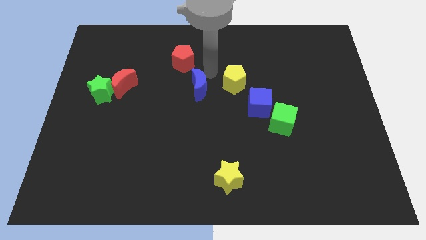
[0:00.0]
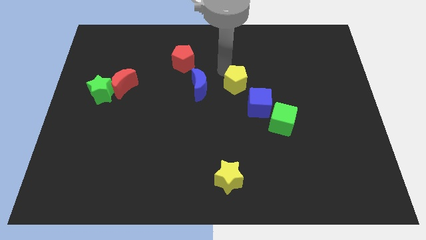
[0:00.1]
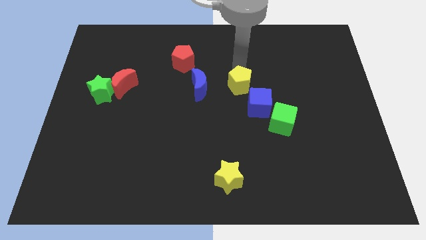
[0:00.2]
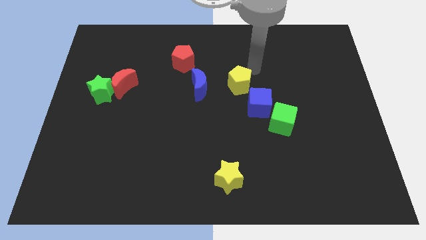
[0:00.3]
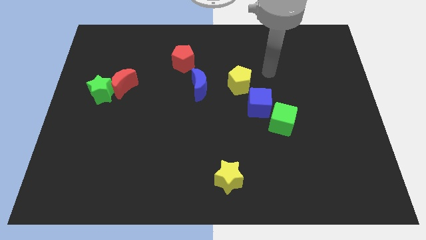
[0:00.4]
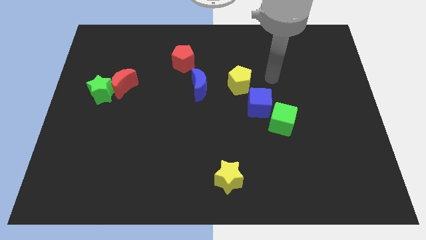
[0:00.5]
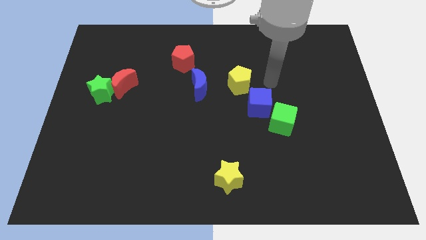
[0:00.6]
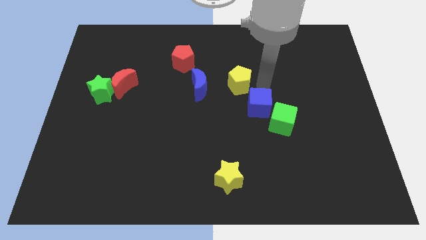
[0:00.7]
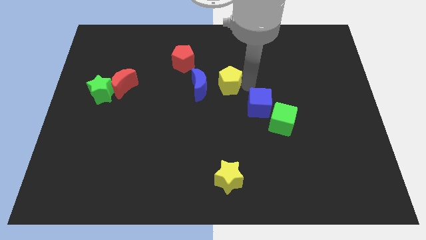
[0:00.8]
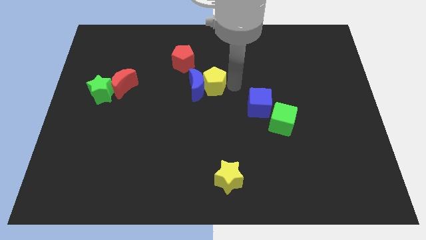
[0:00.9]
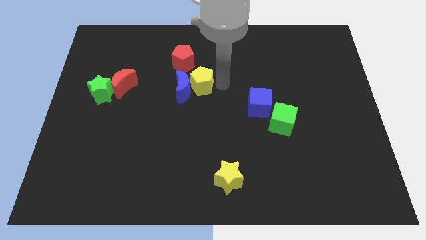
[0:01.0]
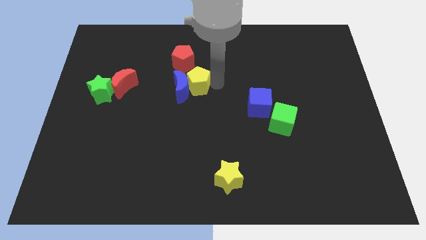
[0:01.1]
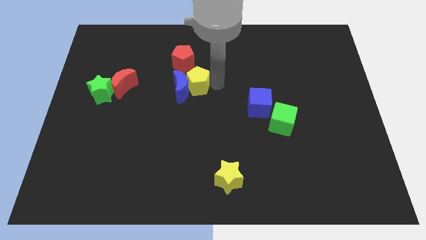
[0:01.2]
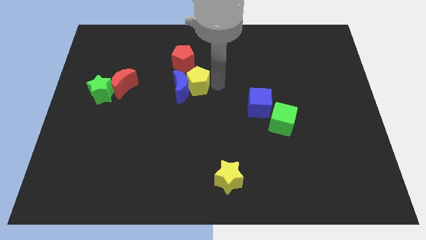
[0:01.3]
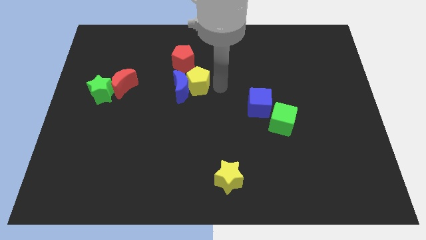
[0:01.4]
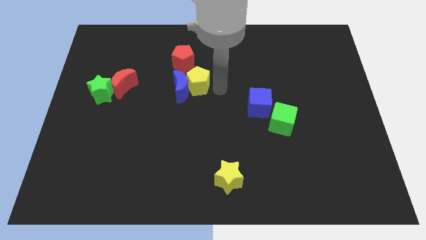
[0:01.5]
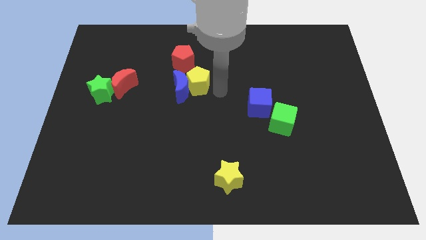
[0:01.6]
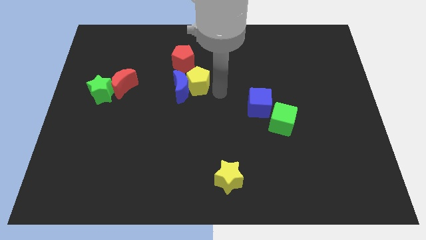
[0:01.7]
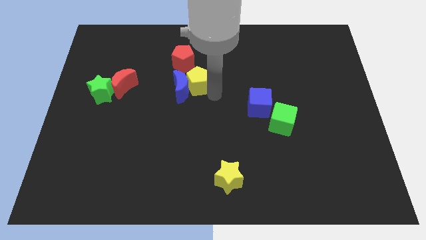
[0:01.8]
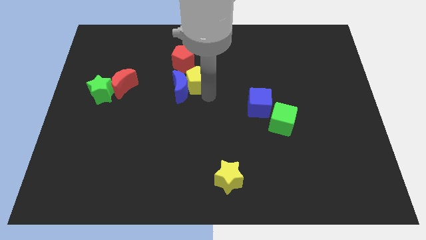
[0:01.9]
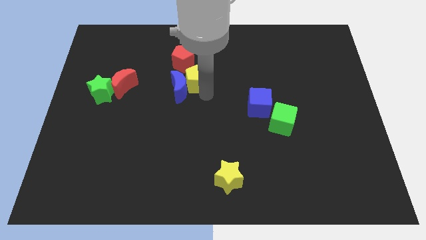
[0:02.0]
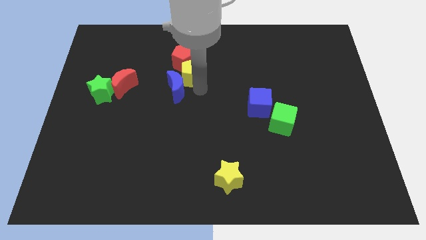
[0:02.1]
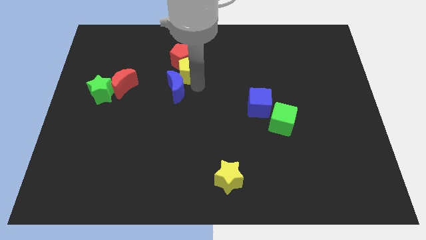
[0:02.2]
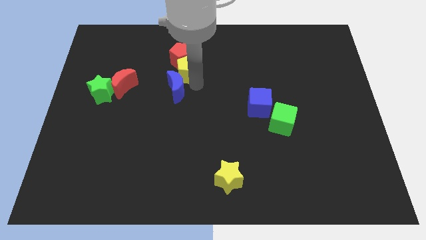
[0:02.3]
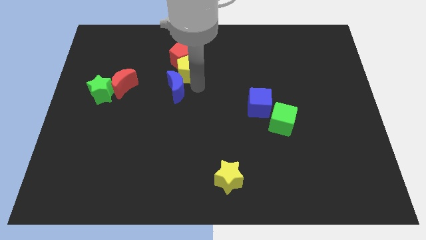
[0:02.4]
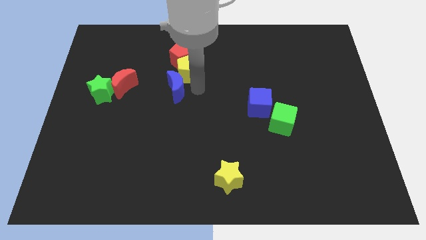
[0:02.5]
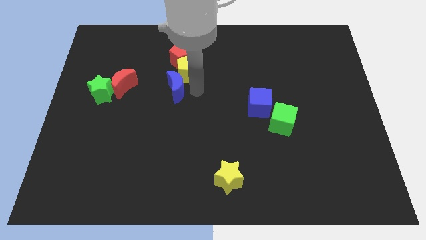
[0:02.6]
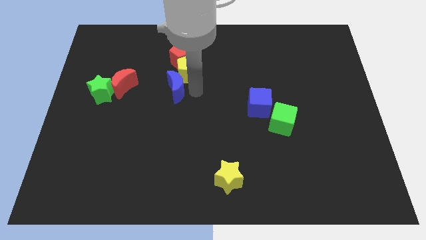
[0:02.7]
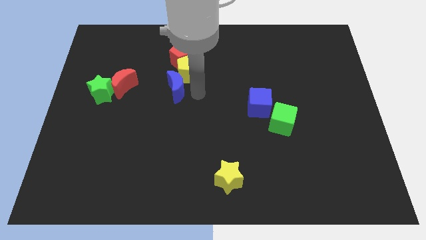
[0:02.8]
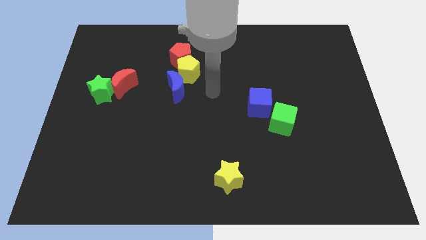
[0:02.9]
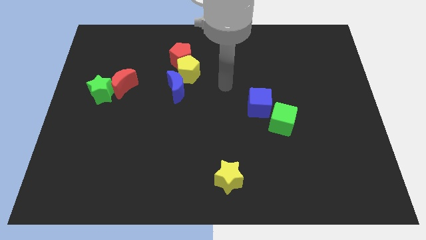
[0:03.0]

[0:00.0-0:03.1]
place the yellow pentagon and blue moon at the bottom side of the red pentagon

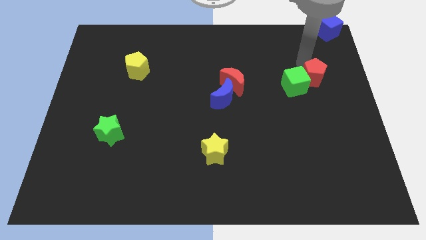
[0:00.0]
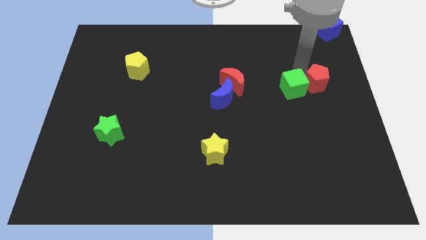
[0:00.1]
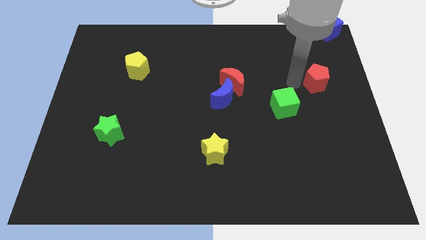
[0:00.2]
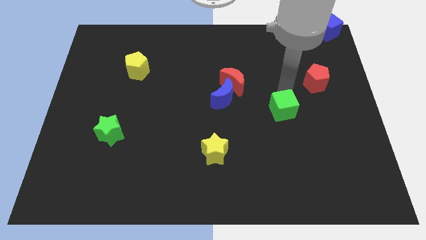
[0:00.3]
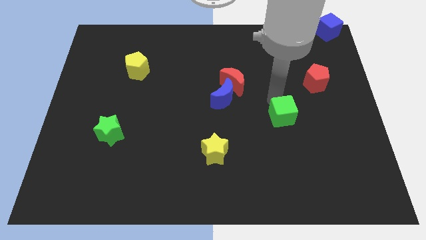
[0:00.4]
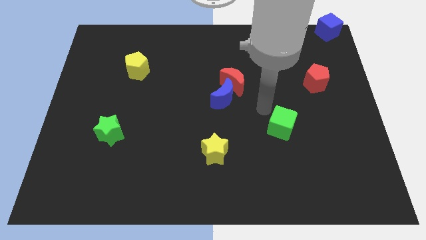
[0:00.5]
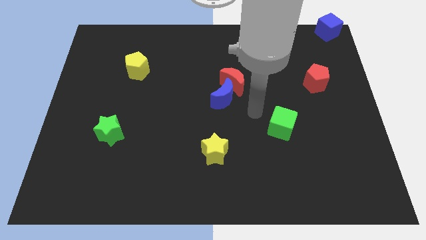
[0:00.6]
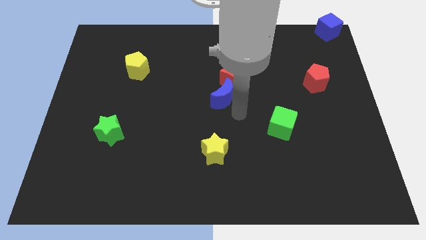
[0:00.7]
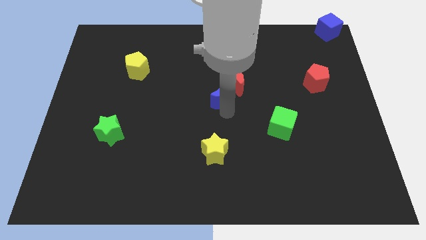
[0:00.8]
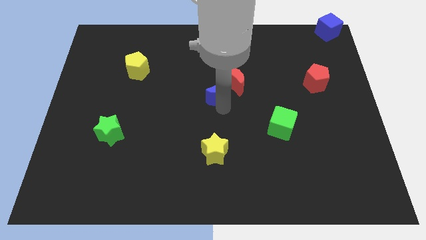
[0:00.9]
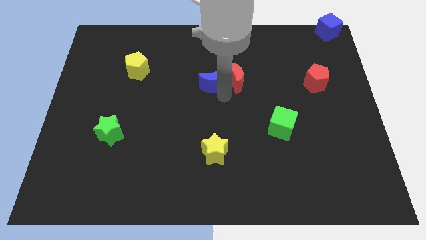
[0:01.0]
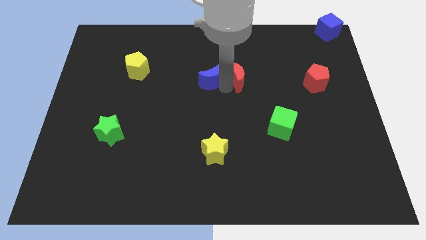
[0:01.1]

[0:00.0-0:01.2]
separate green cube from the red pentagon

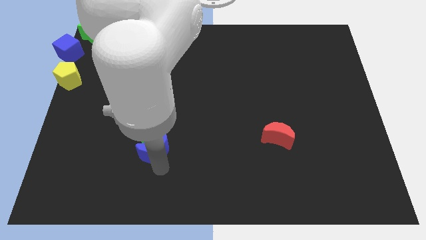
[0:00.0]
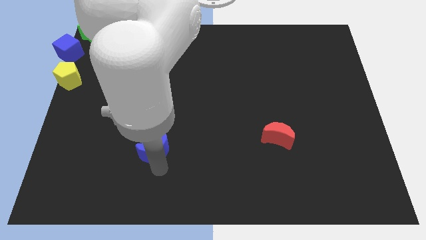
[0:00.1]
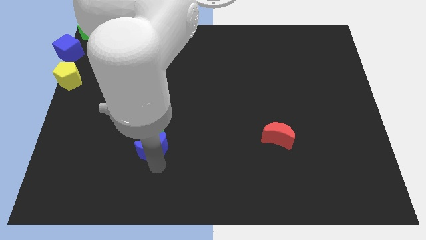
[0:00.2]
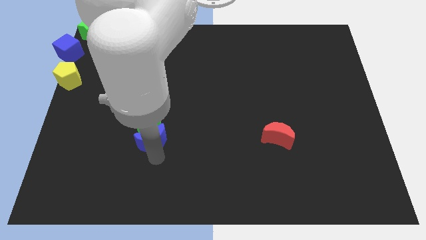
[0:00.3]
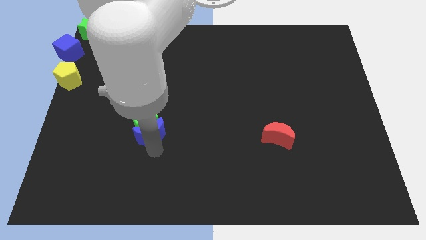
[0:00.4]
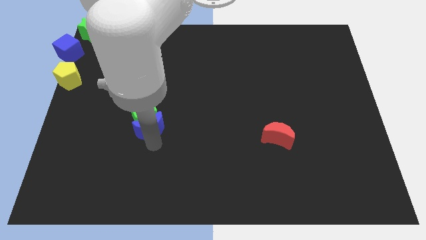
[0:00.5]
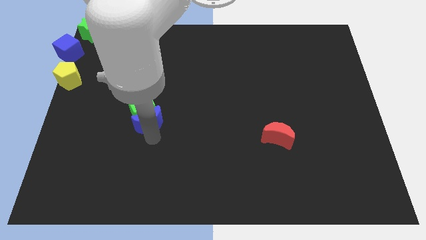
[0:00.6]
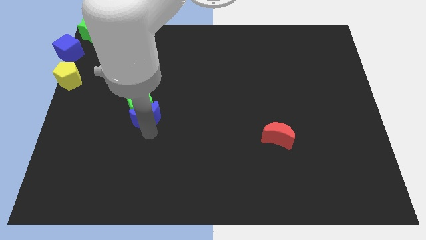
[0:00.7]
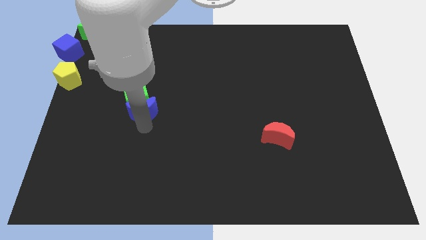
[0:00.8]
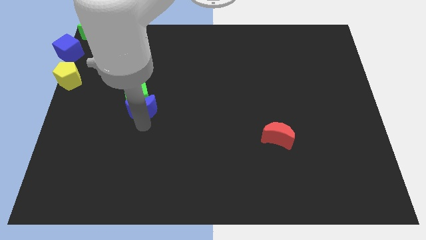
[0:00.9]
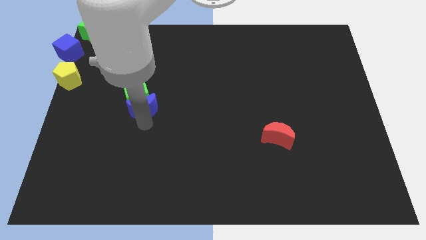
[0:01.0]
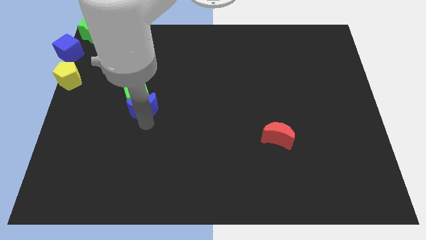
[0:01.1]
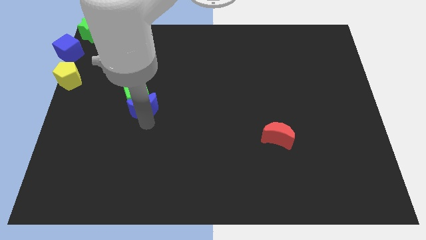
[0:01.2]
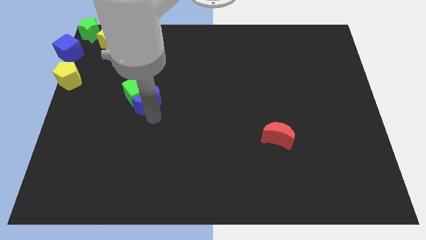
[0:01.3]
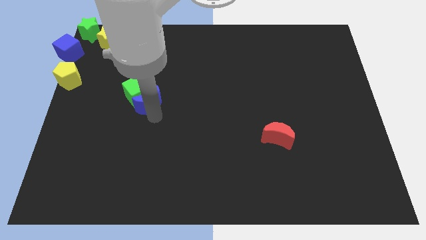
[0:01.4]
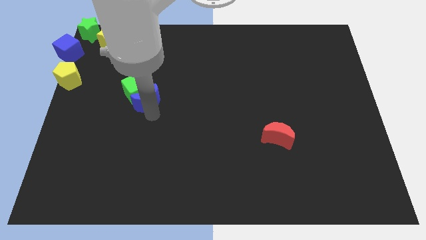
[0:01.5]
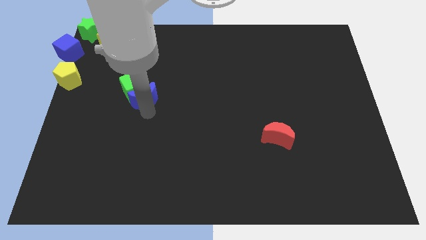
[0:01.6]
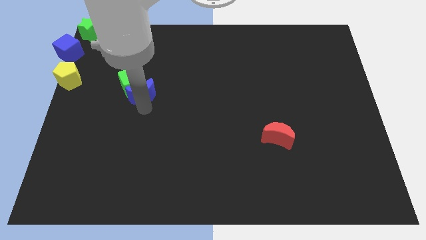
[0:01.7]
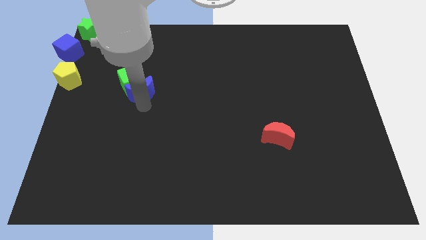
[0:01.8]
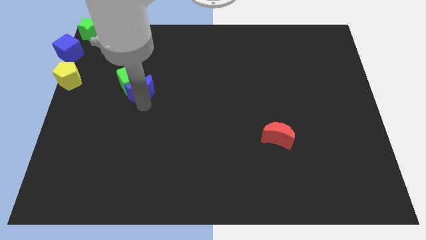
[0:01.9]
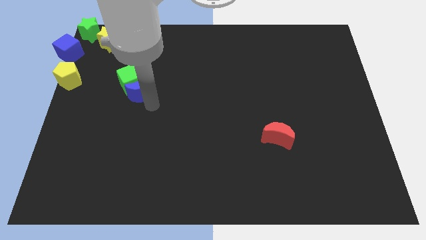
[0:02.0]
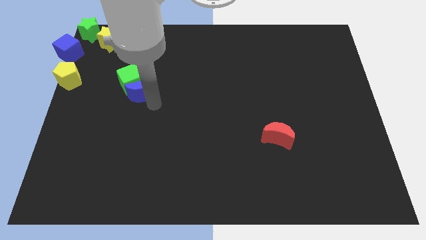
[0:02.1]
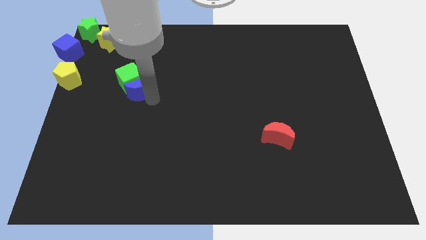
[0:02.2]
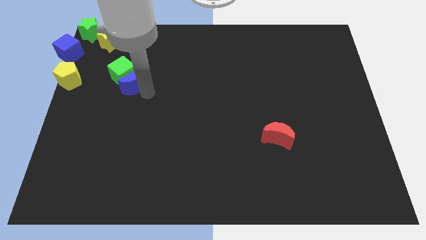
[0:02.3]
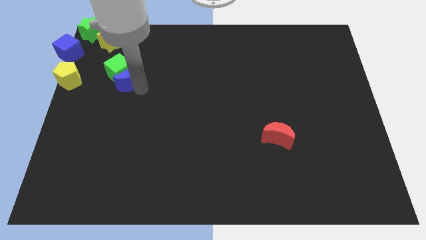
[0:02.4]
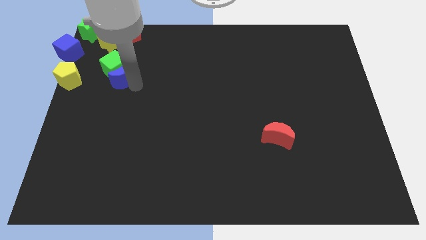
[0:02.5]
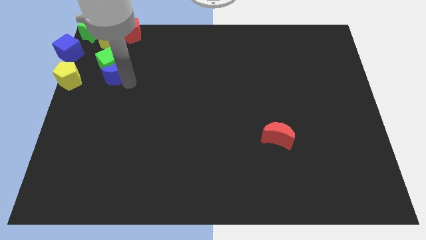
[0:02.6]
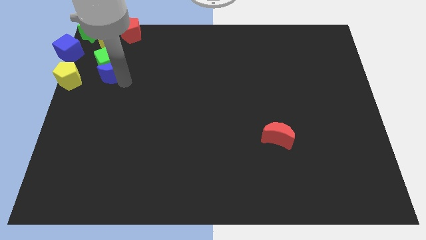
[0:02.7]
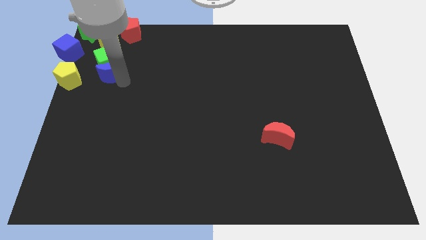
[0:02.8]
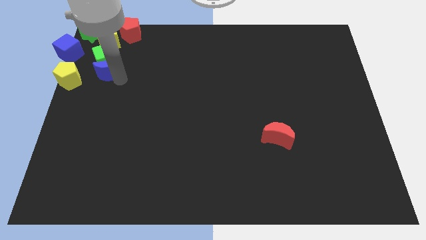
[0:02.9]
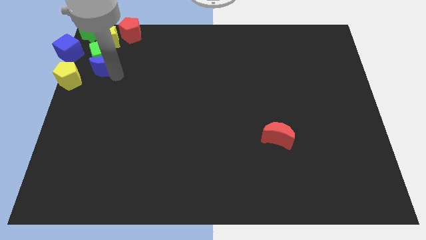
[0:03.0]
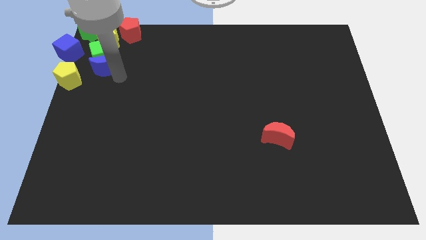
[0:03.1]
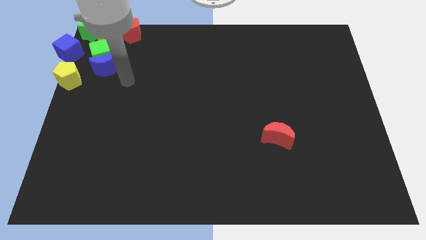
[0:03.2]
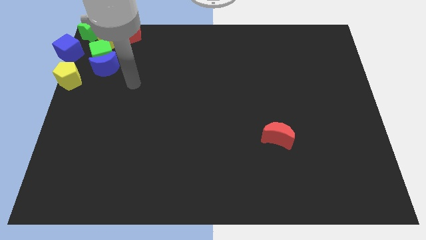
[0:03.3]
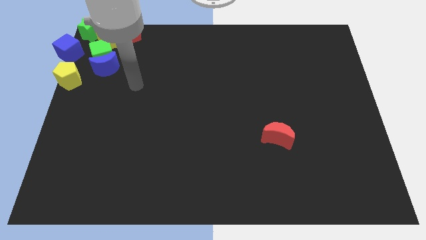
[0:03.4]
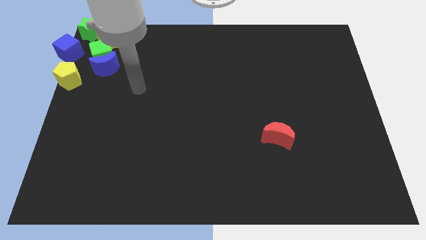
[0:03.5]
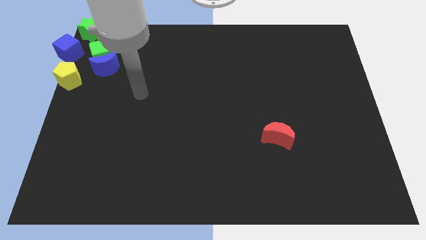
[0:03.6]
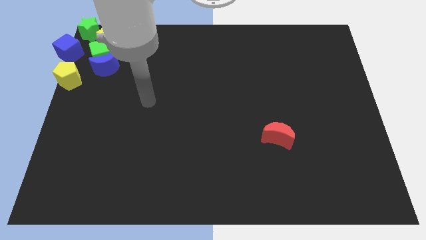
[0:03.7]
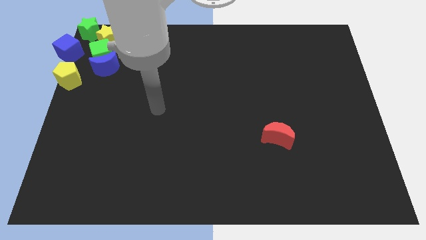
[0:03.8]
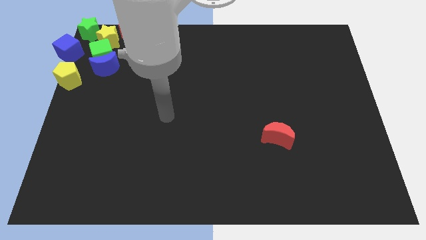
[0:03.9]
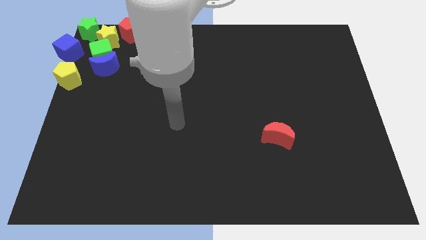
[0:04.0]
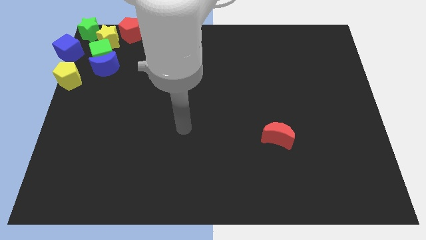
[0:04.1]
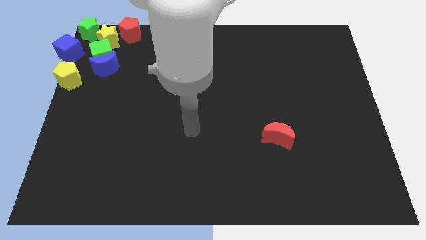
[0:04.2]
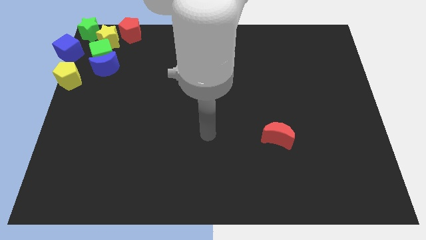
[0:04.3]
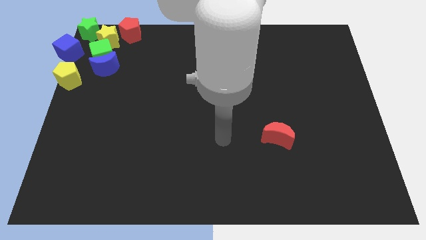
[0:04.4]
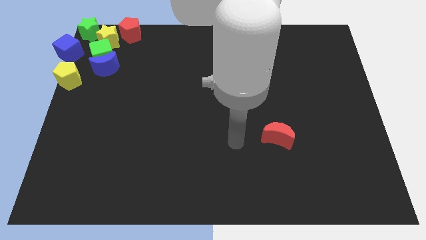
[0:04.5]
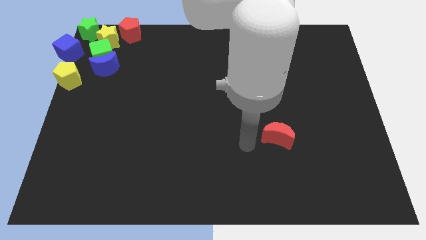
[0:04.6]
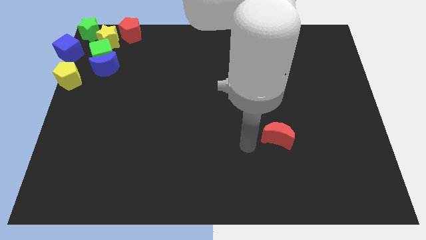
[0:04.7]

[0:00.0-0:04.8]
slide blue moon and green cube to group of blocks
